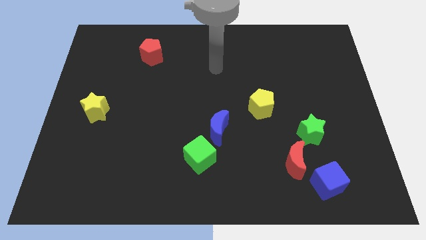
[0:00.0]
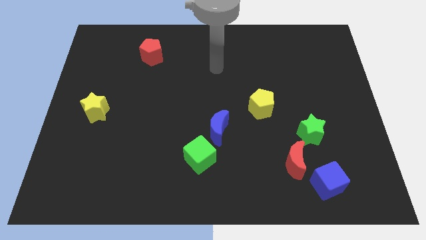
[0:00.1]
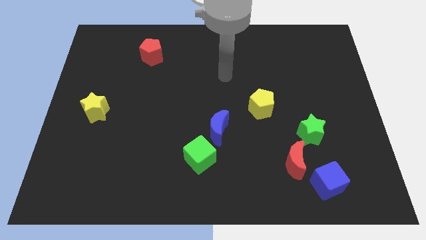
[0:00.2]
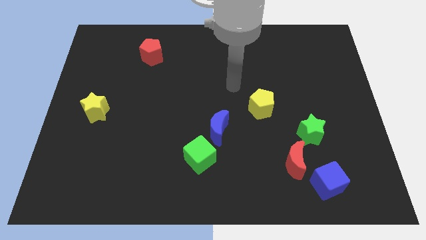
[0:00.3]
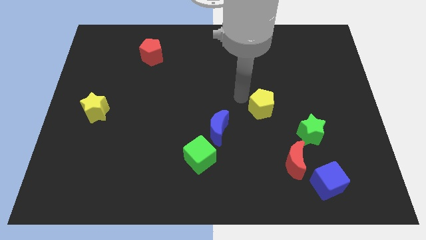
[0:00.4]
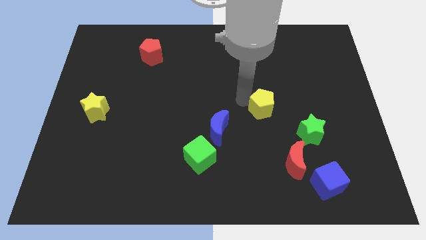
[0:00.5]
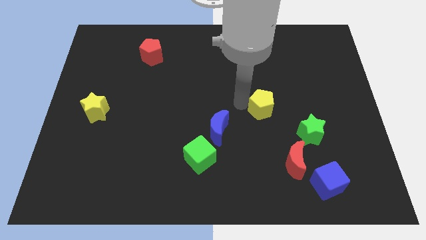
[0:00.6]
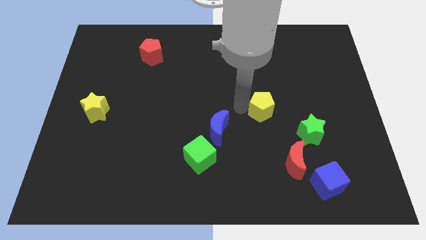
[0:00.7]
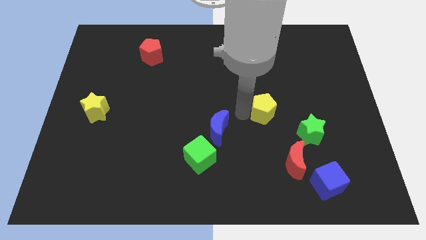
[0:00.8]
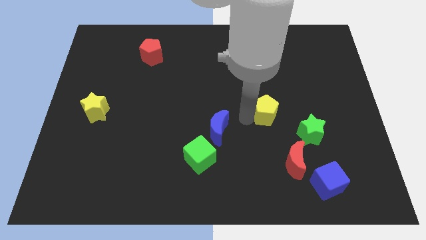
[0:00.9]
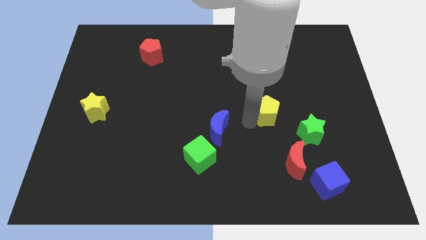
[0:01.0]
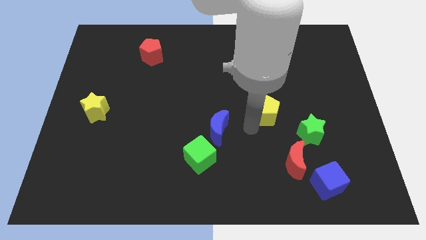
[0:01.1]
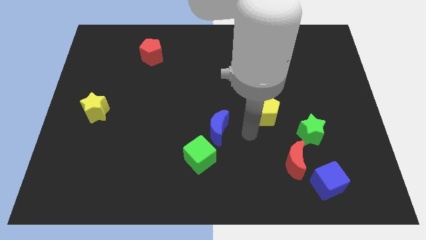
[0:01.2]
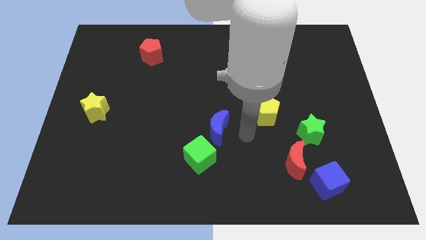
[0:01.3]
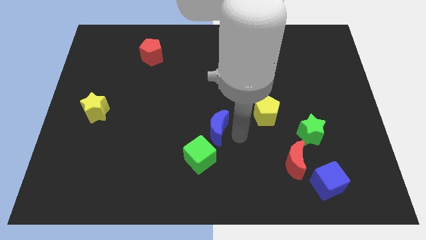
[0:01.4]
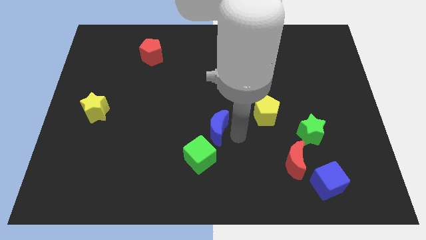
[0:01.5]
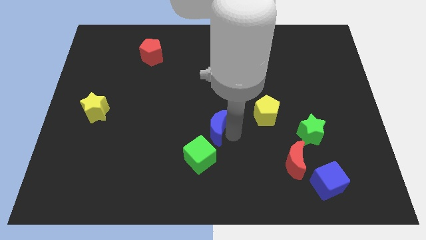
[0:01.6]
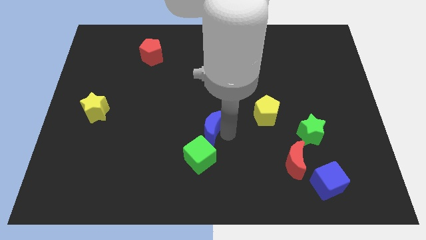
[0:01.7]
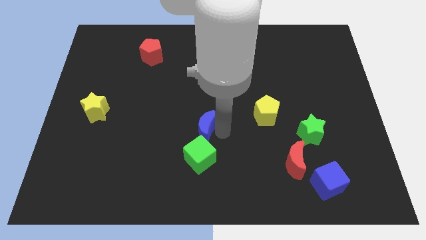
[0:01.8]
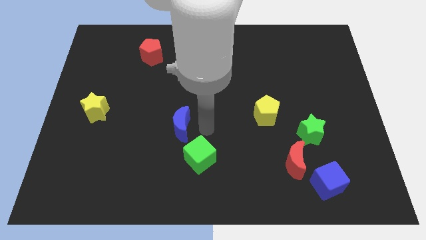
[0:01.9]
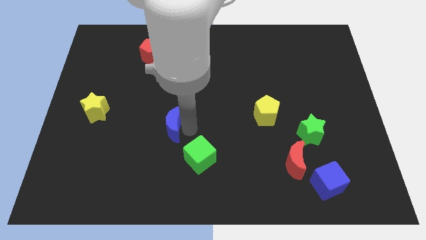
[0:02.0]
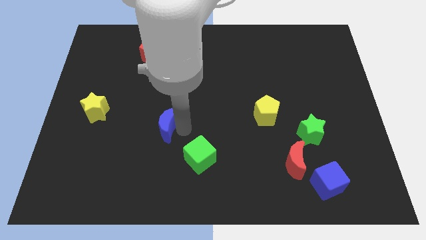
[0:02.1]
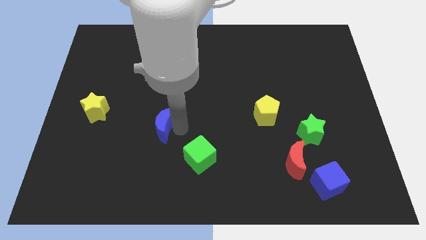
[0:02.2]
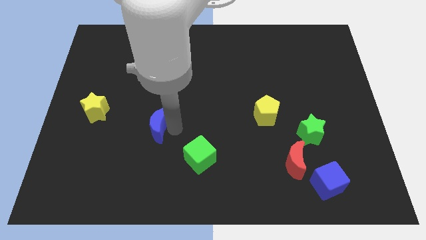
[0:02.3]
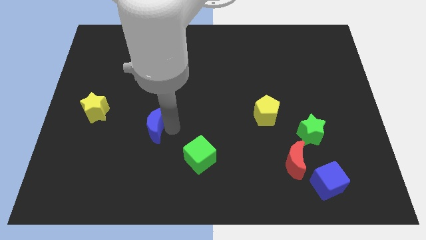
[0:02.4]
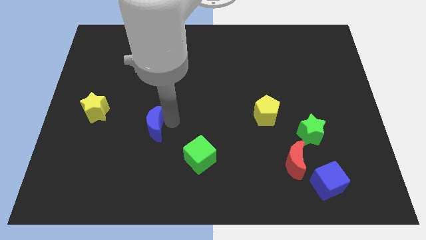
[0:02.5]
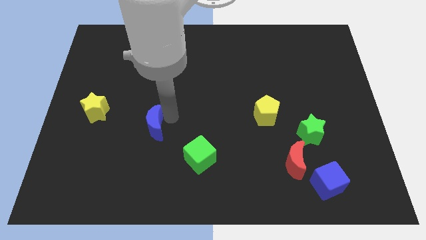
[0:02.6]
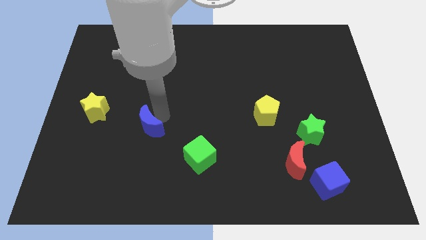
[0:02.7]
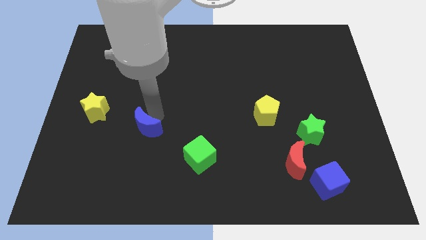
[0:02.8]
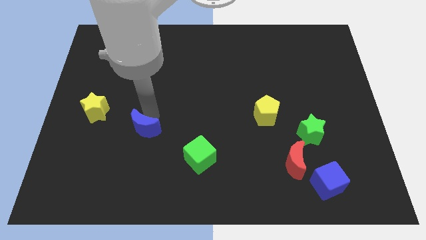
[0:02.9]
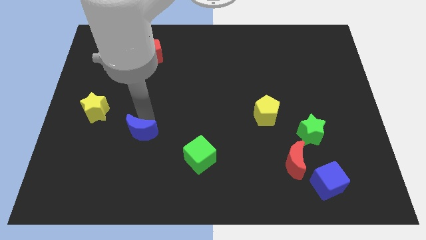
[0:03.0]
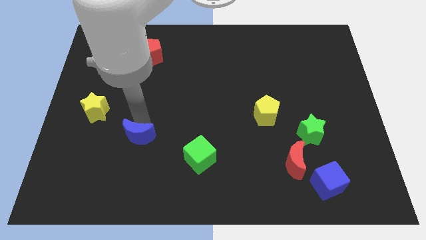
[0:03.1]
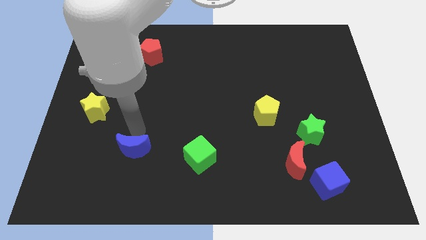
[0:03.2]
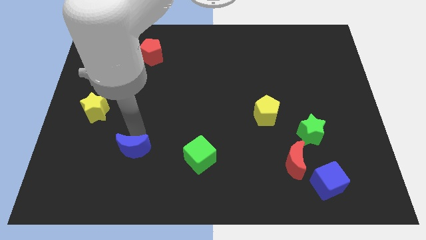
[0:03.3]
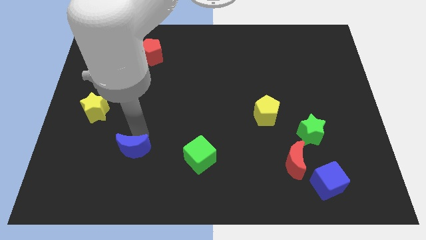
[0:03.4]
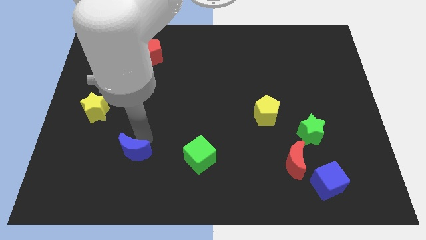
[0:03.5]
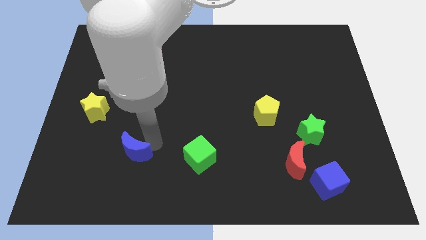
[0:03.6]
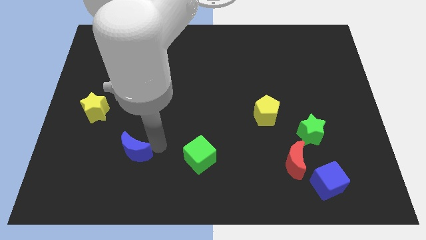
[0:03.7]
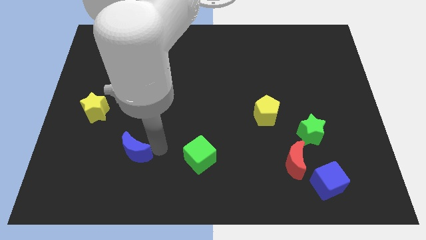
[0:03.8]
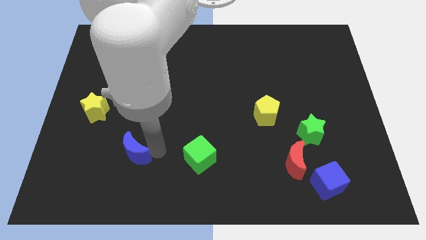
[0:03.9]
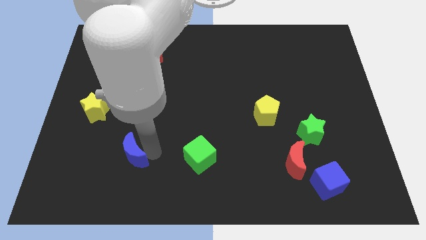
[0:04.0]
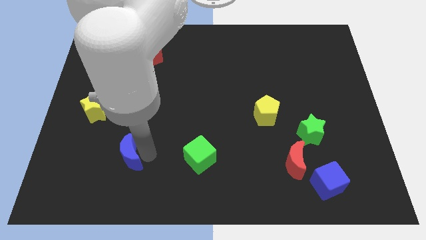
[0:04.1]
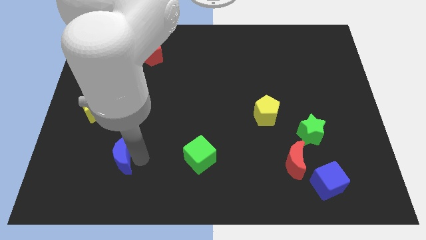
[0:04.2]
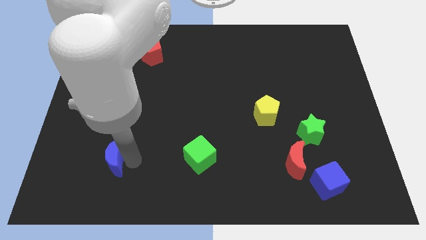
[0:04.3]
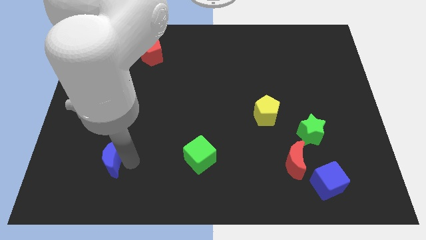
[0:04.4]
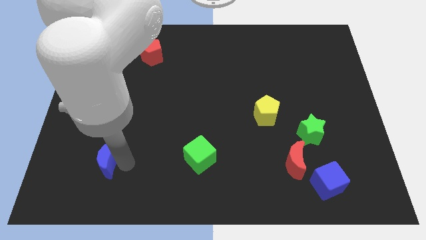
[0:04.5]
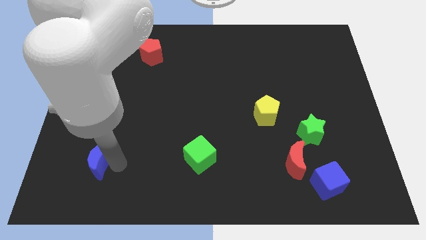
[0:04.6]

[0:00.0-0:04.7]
move the blue moon horizontally left to the green cube

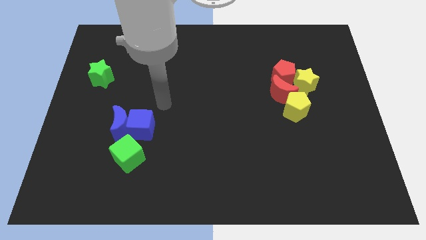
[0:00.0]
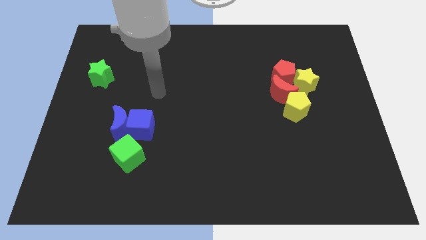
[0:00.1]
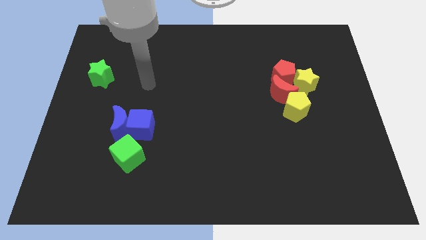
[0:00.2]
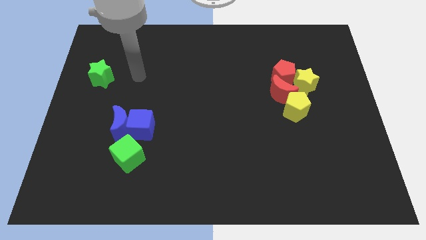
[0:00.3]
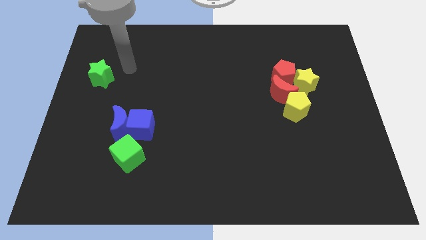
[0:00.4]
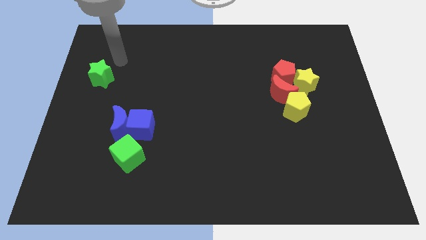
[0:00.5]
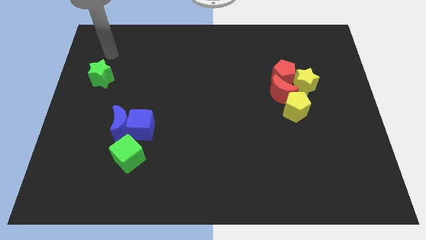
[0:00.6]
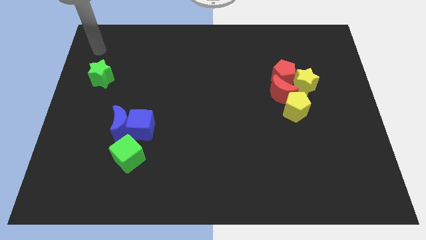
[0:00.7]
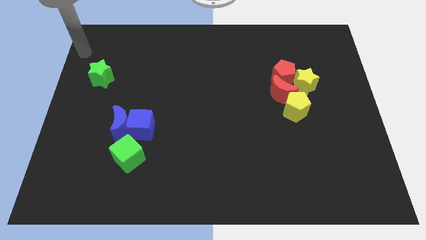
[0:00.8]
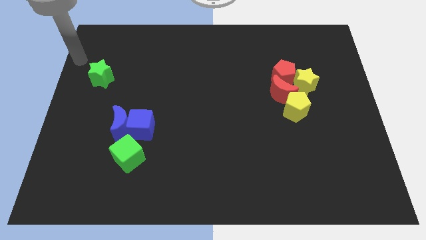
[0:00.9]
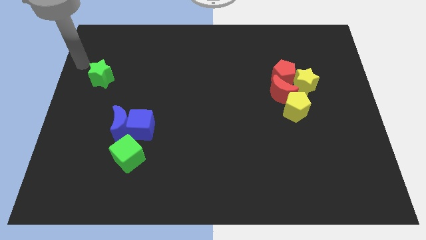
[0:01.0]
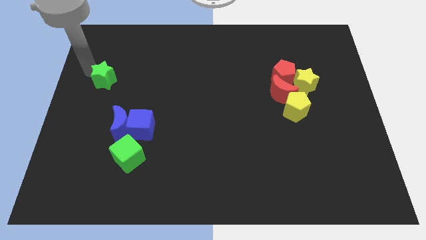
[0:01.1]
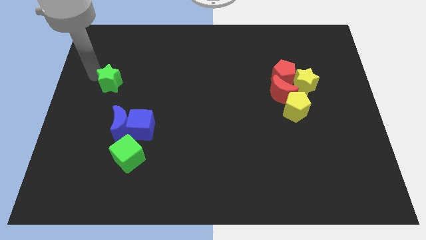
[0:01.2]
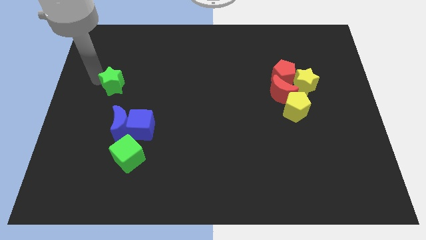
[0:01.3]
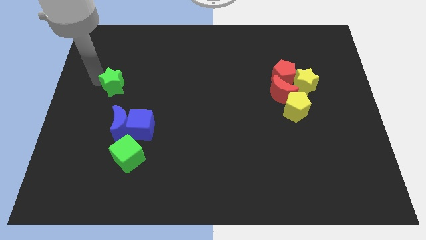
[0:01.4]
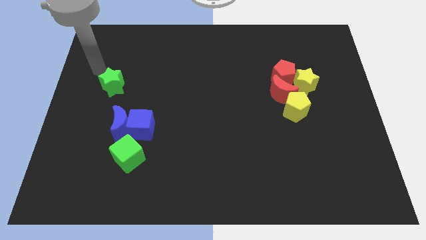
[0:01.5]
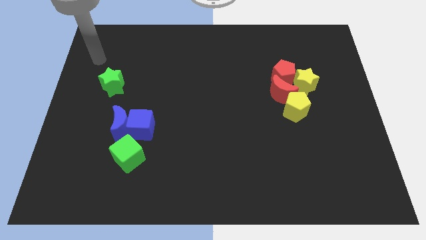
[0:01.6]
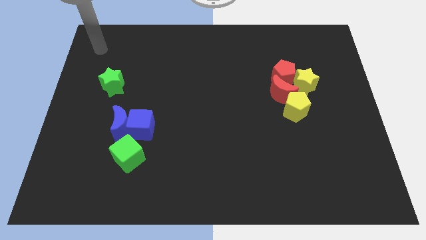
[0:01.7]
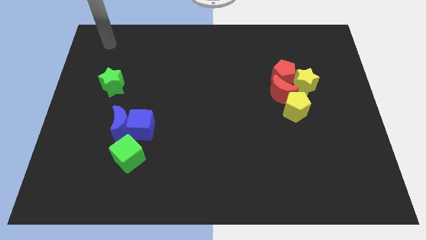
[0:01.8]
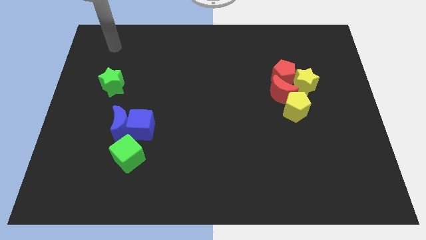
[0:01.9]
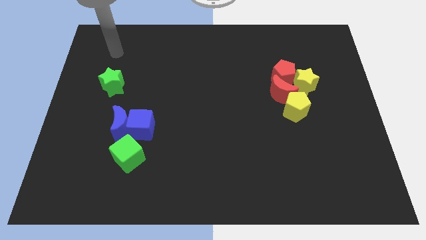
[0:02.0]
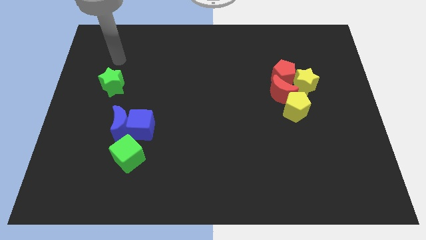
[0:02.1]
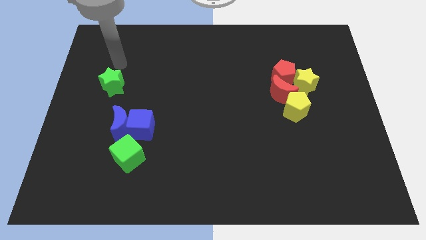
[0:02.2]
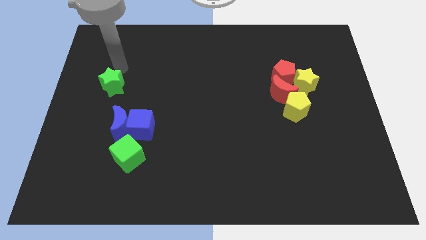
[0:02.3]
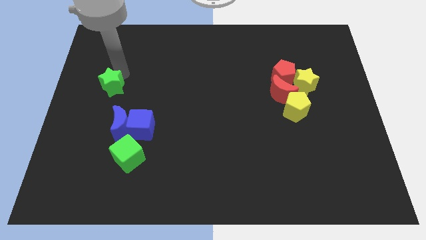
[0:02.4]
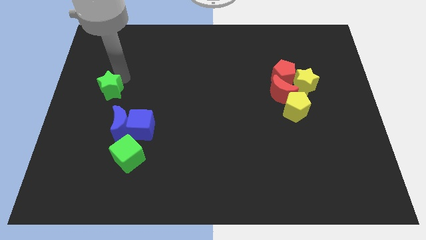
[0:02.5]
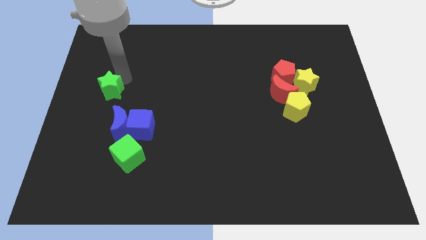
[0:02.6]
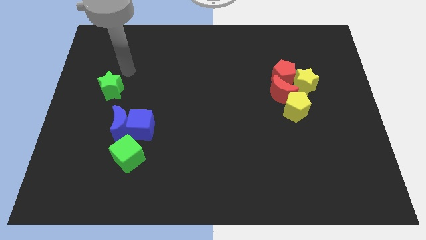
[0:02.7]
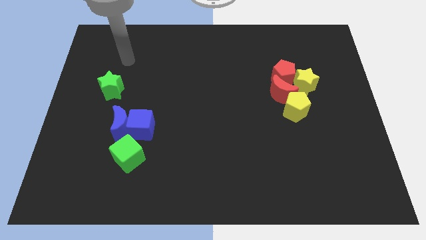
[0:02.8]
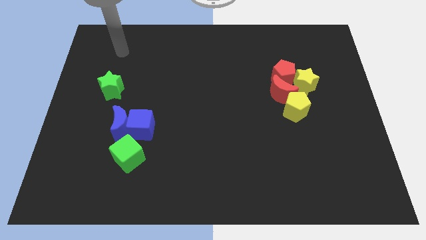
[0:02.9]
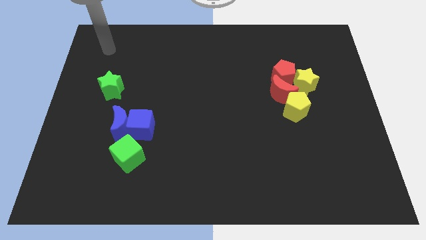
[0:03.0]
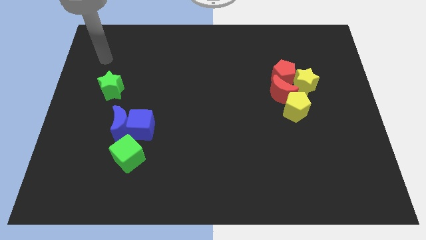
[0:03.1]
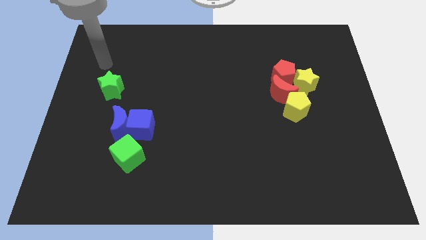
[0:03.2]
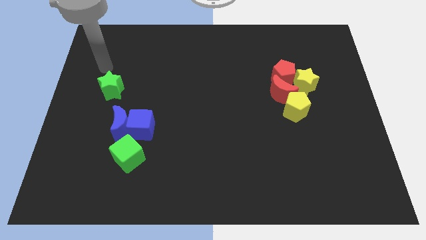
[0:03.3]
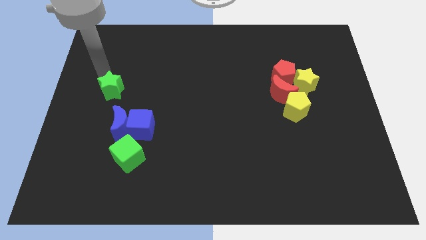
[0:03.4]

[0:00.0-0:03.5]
push the green star to the bottom of the board

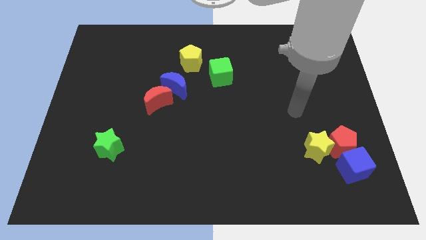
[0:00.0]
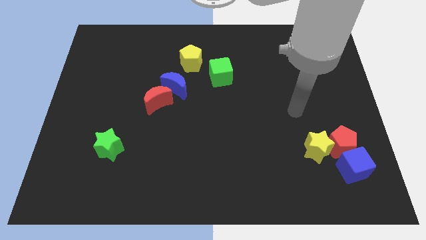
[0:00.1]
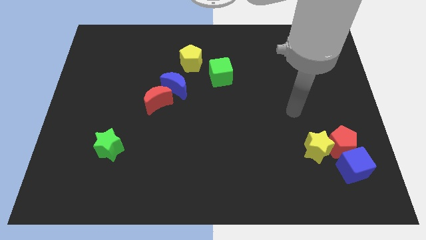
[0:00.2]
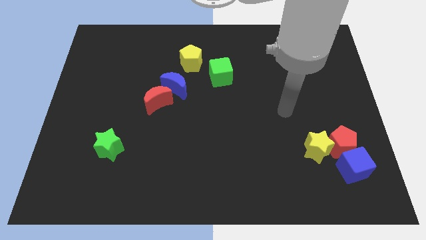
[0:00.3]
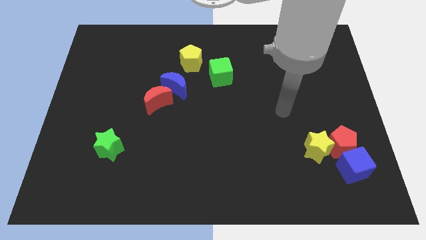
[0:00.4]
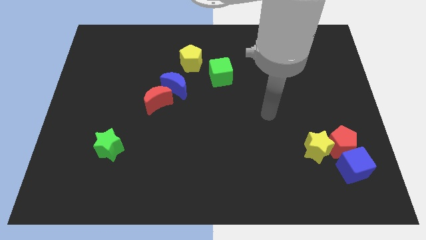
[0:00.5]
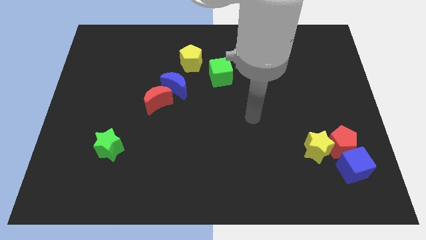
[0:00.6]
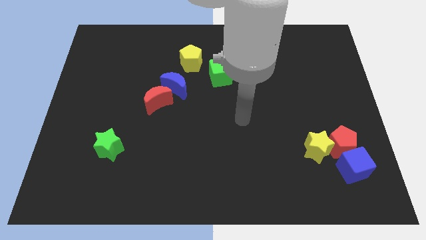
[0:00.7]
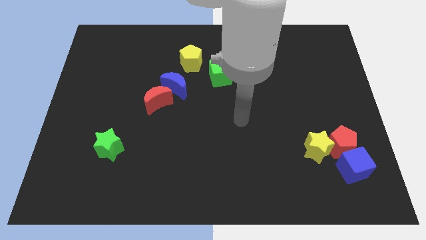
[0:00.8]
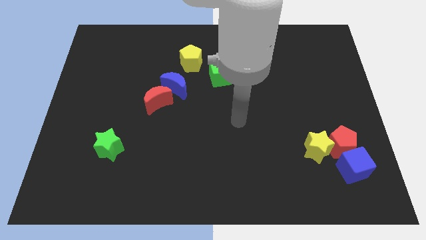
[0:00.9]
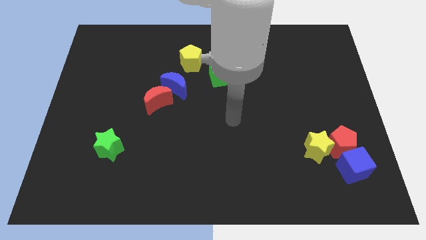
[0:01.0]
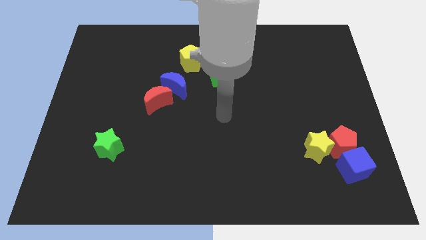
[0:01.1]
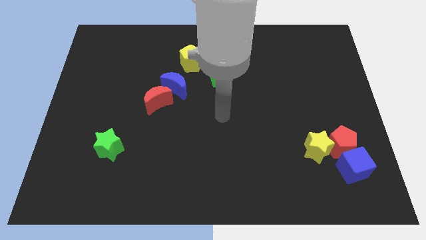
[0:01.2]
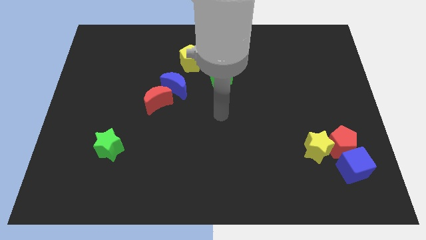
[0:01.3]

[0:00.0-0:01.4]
move your arm to the center of the board
